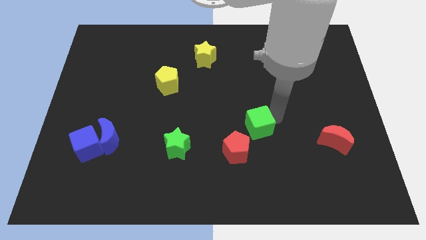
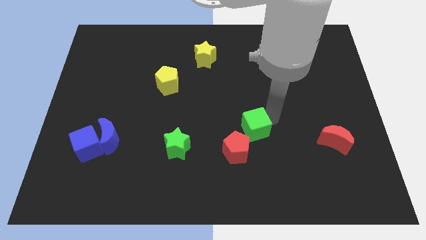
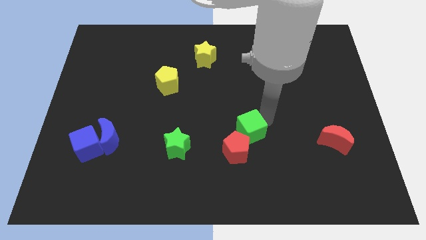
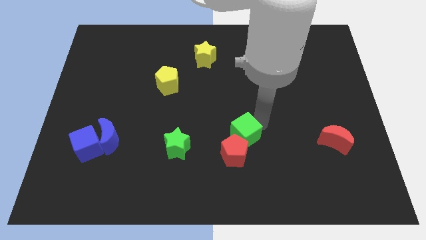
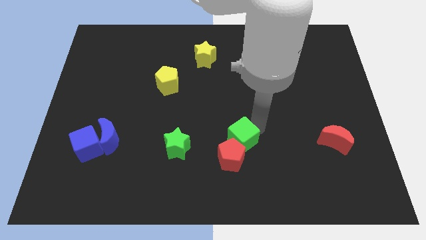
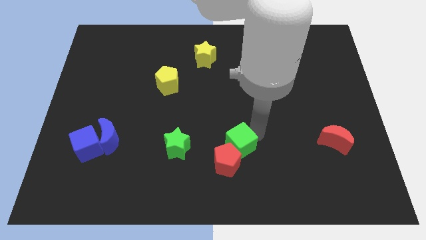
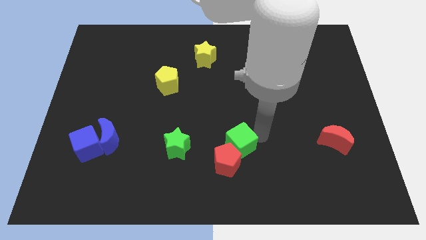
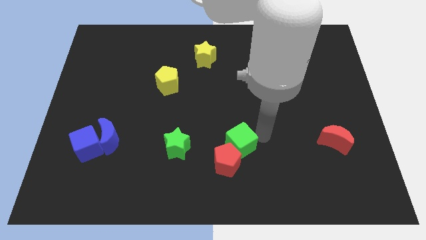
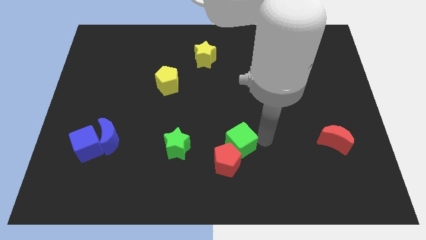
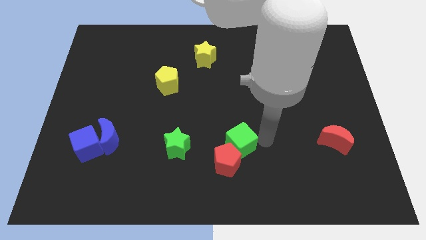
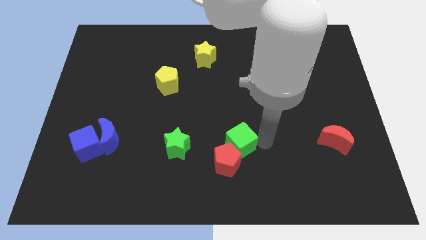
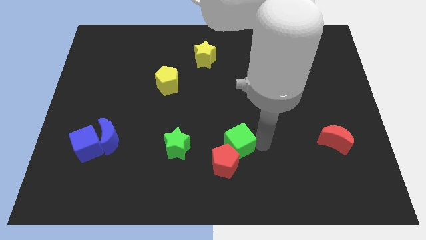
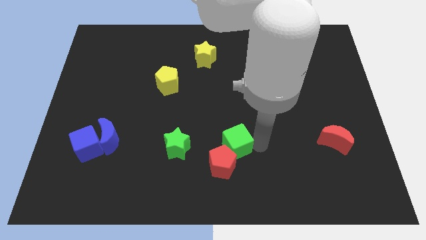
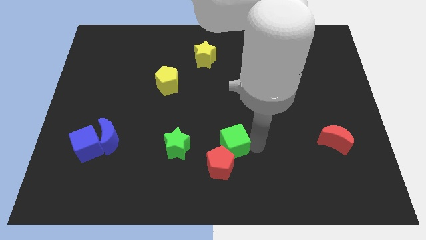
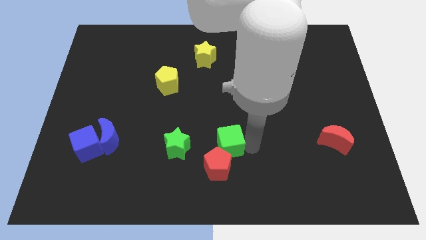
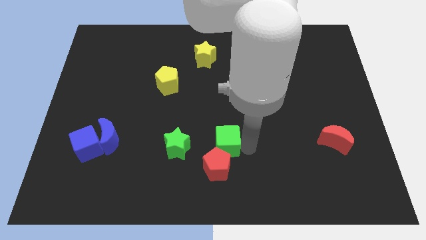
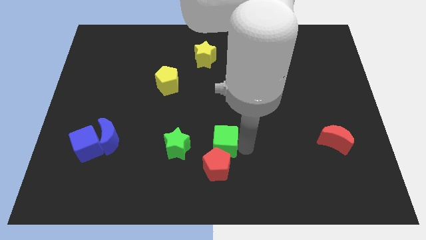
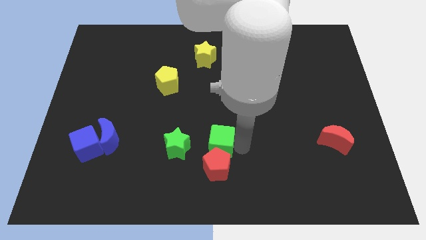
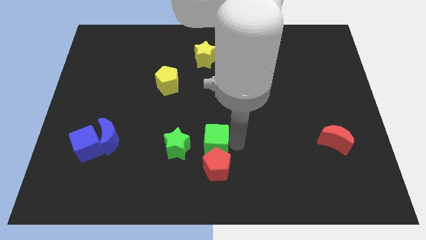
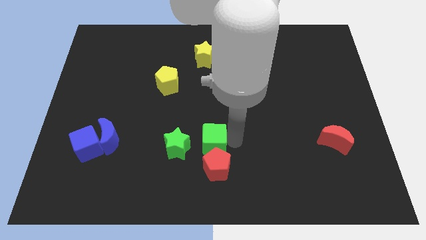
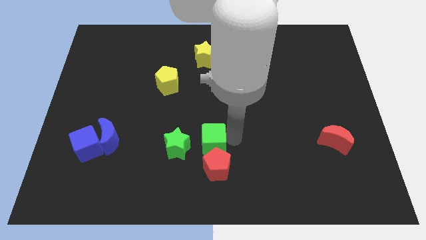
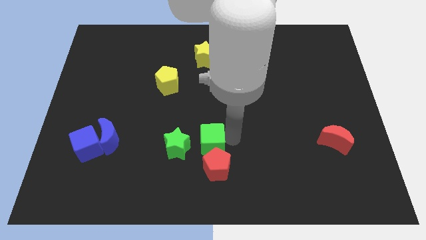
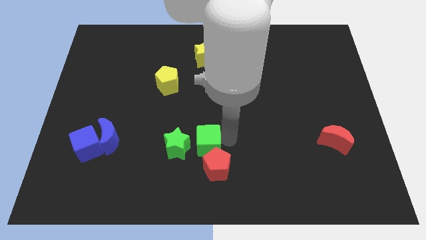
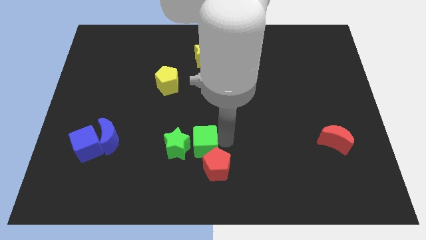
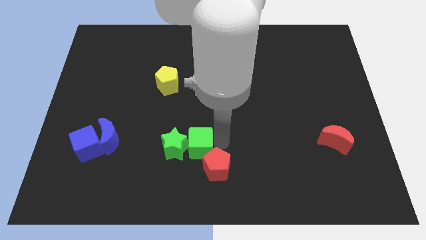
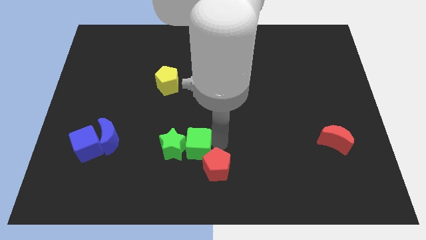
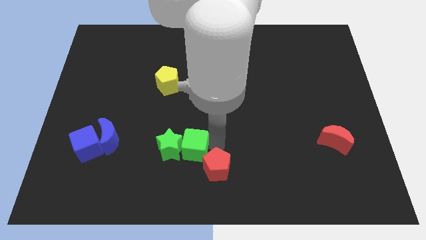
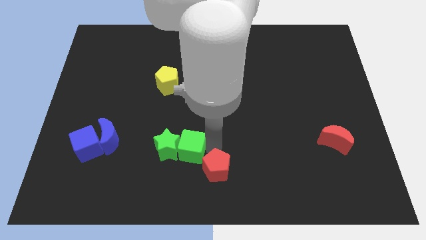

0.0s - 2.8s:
push the green cube into green star

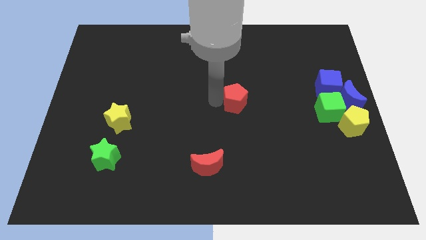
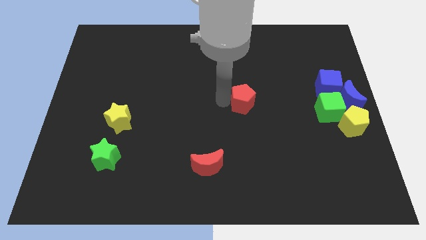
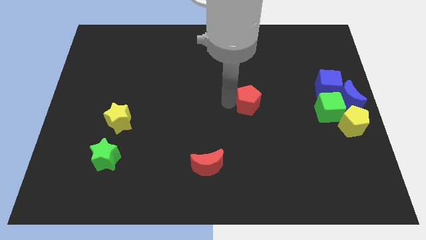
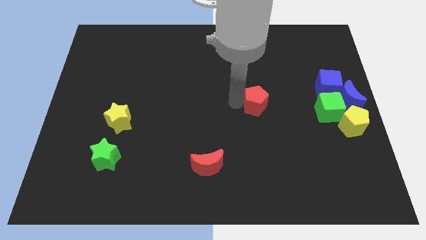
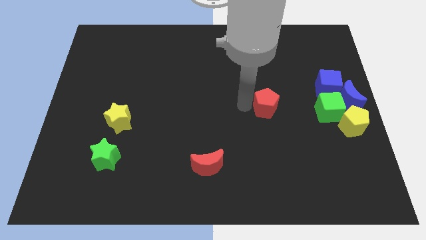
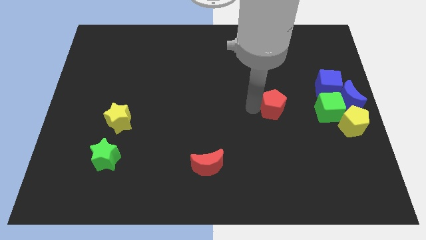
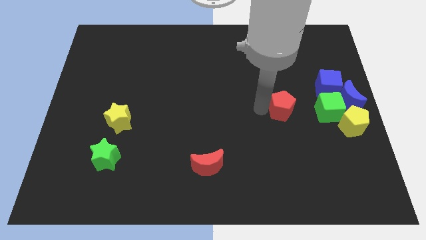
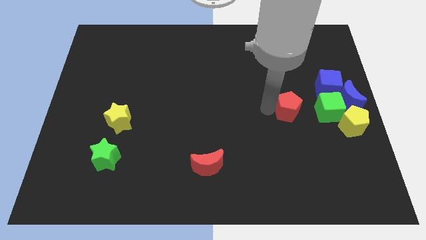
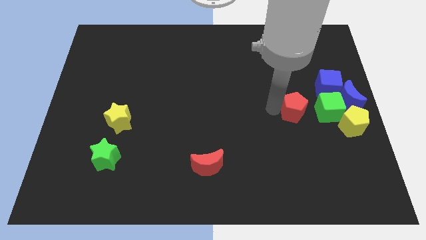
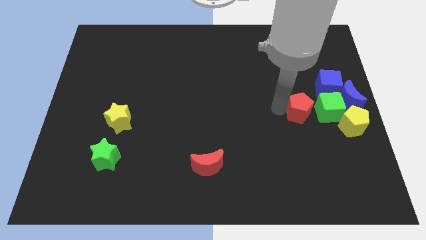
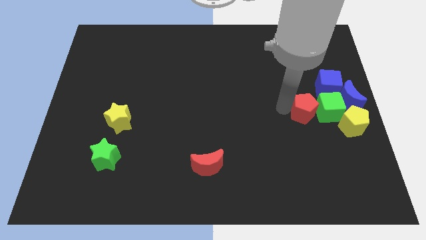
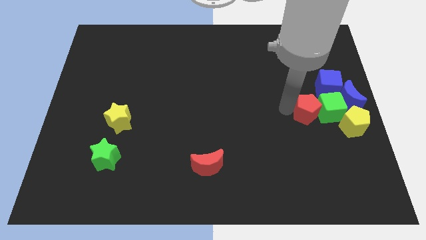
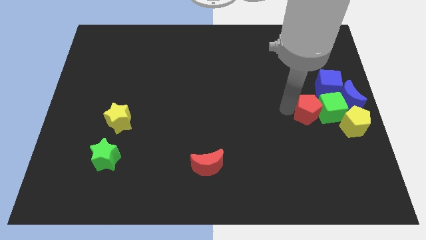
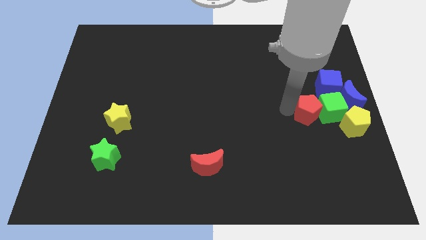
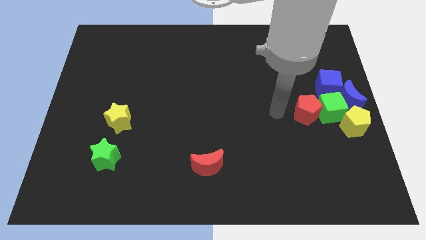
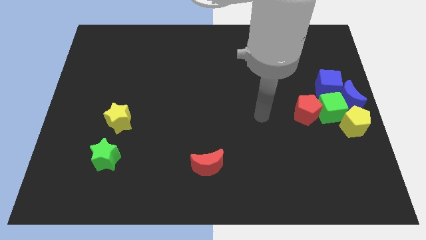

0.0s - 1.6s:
put the red pentagon on the left side of the green cube

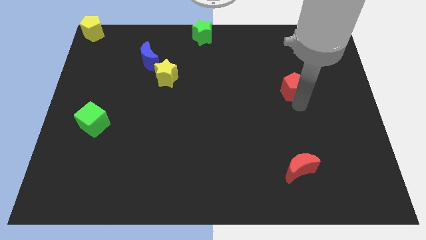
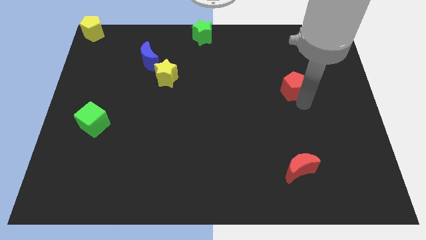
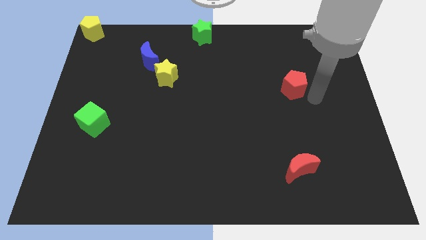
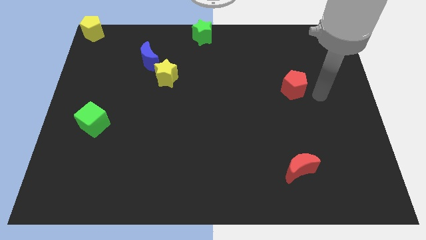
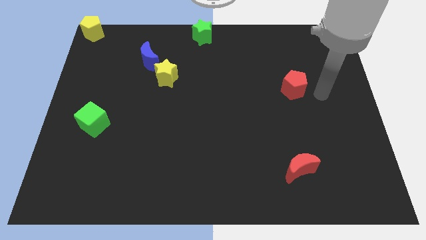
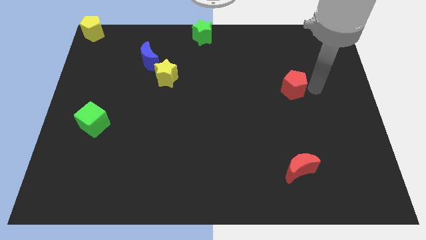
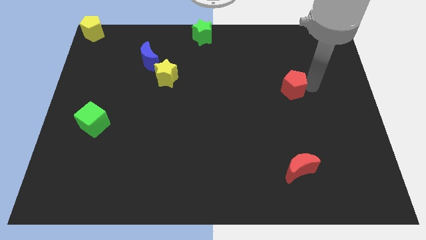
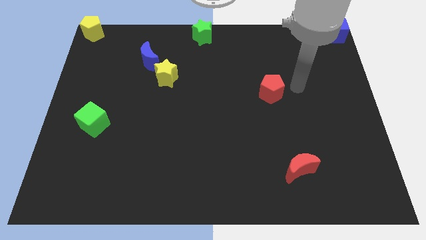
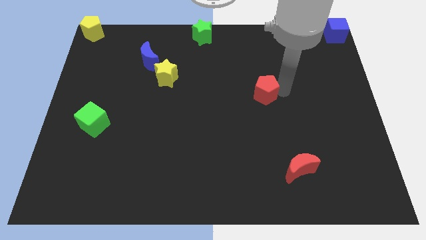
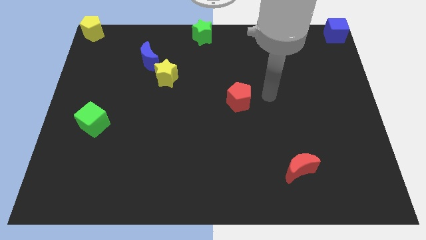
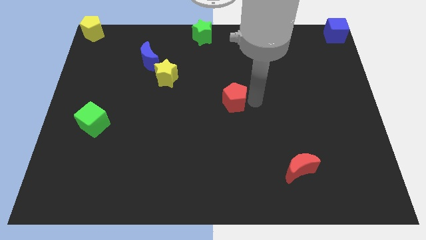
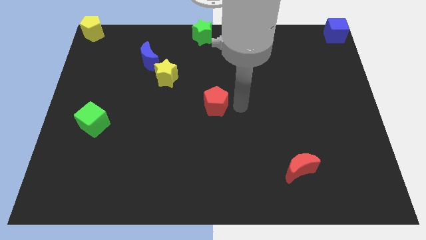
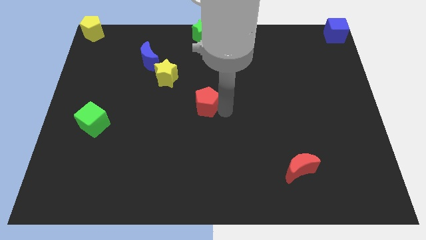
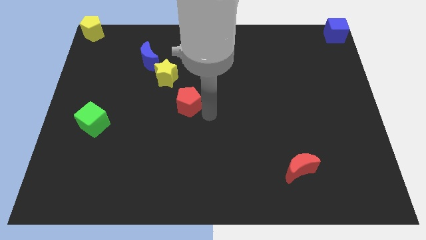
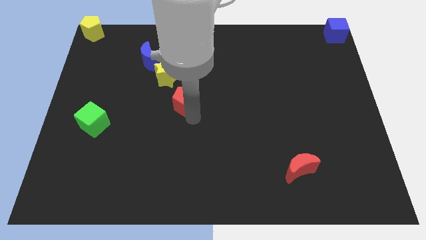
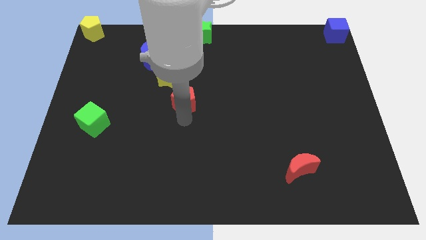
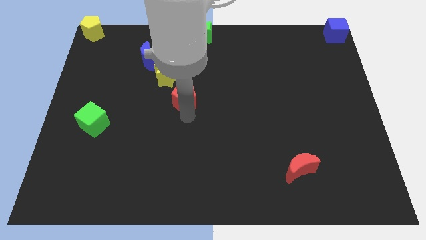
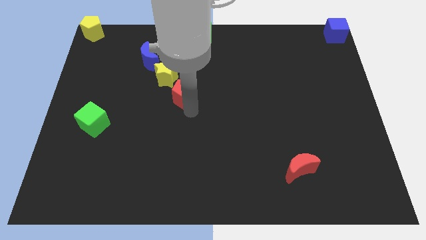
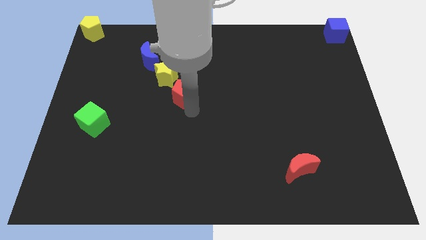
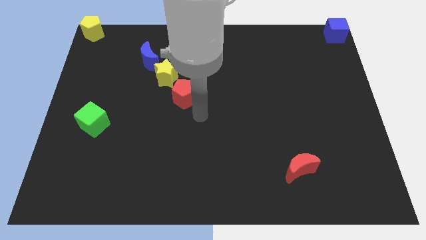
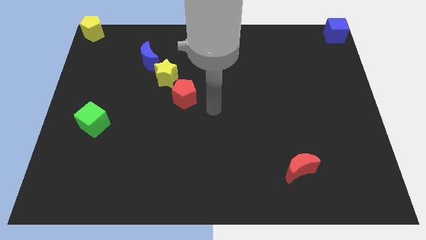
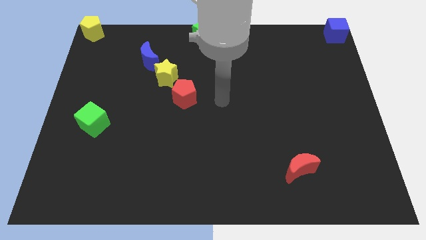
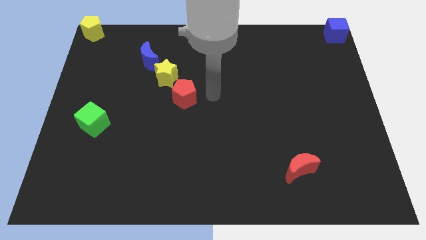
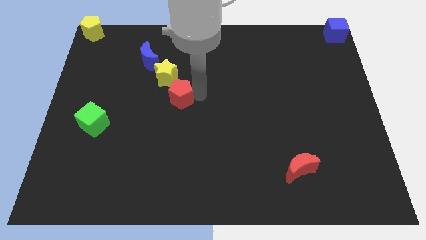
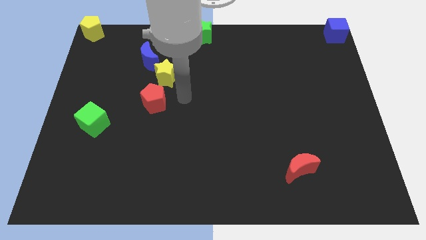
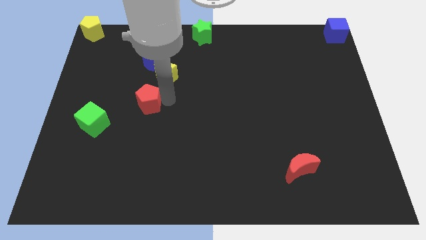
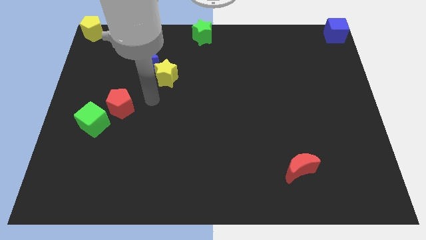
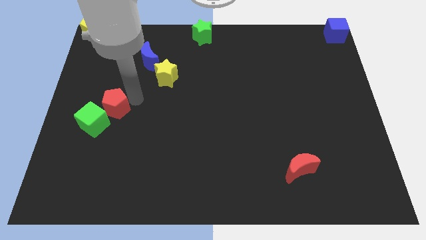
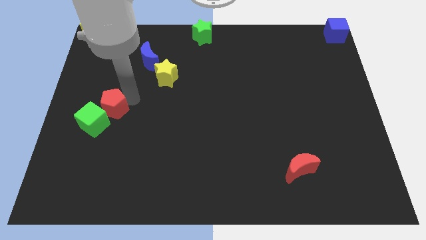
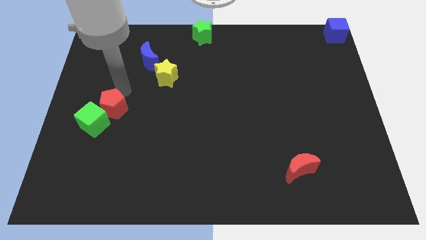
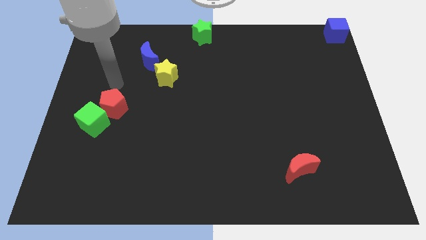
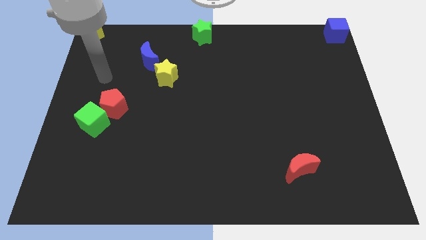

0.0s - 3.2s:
move the red pentagon to the bottom left of the yellow star

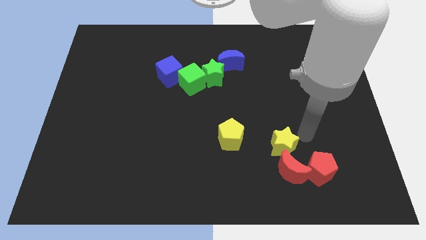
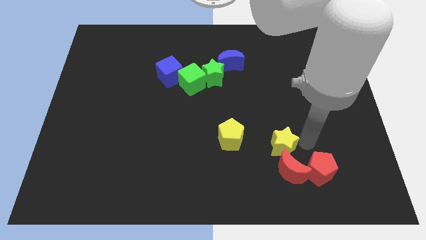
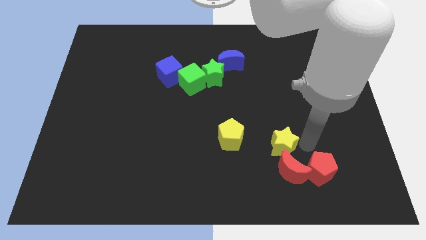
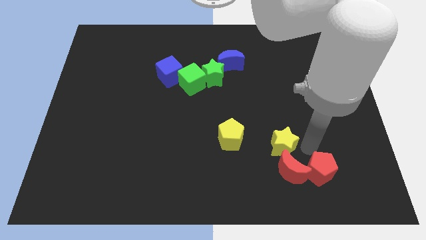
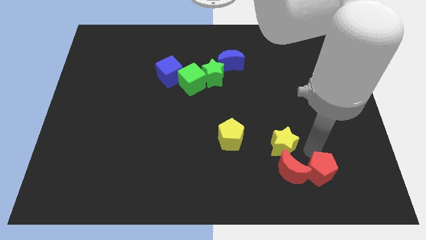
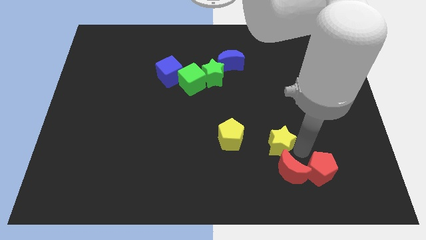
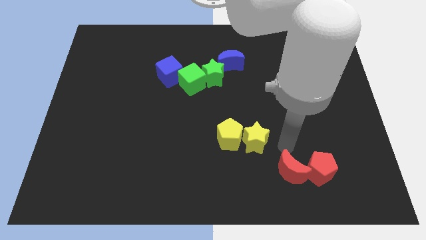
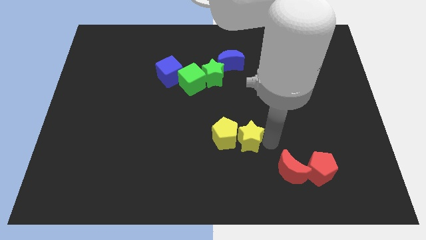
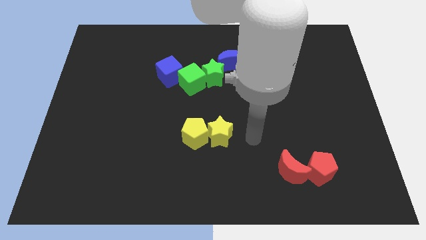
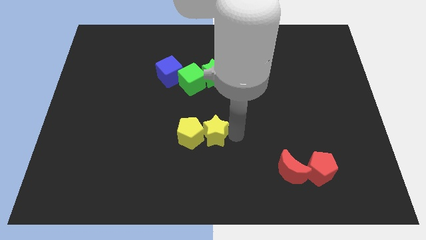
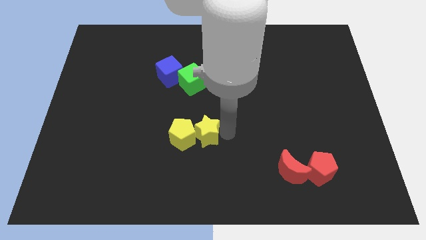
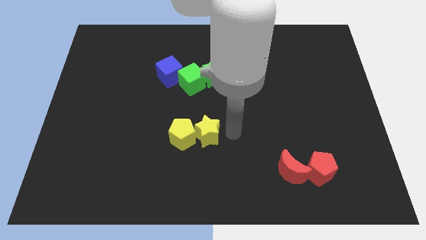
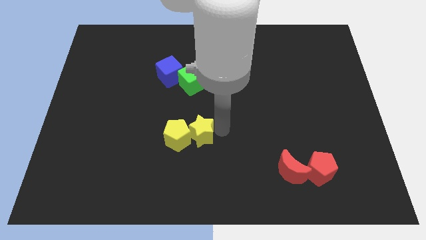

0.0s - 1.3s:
place the yellow star and yellow pentagon together at the bottom side of the green cube
